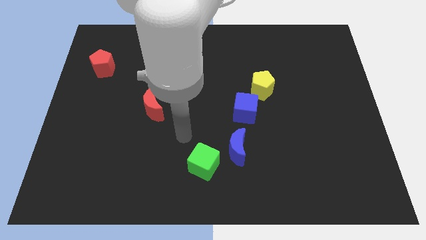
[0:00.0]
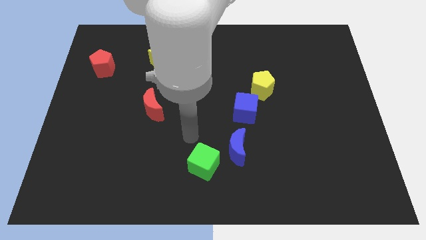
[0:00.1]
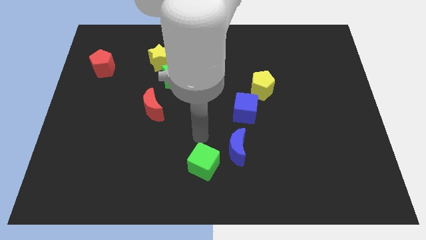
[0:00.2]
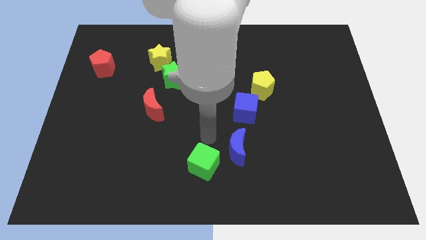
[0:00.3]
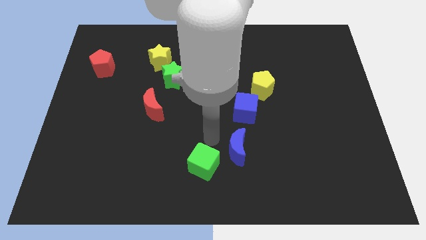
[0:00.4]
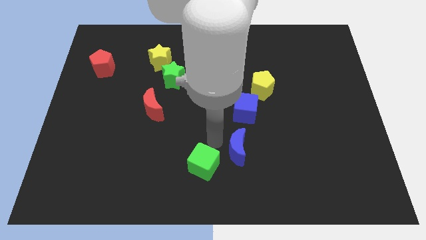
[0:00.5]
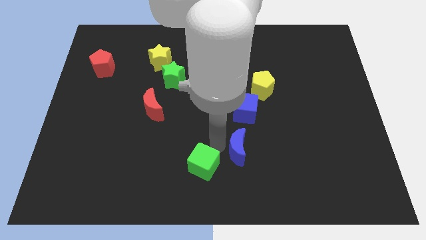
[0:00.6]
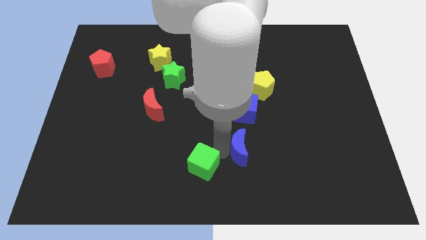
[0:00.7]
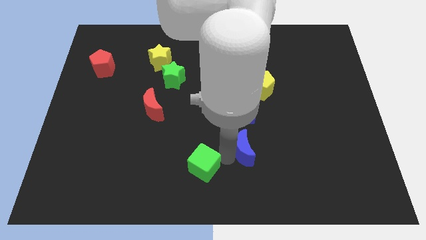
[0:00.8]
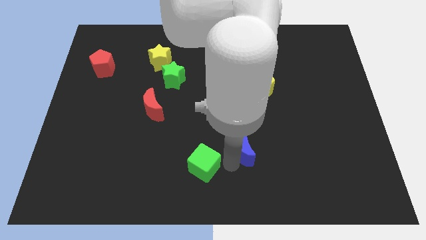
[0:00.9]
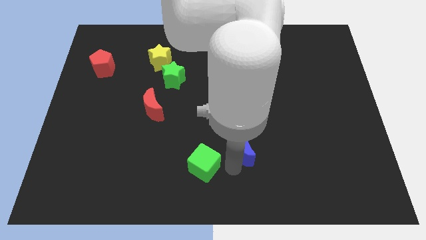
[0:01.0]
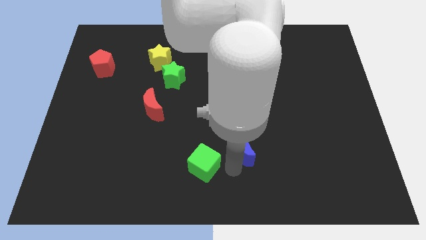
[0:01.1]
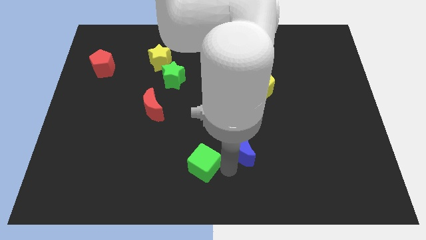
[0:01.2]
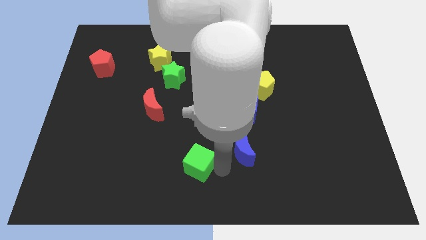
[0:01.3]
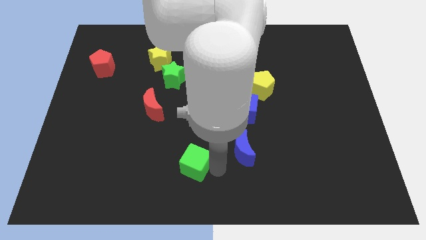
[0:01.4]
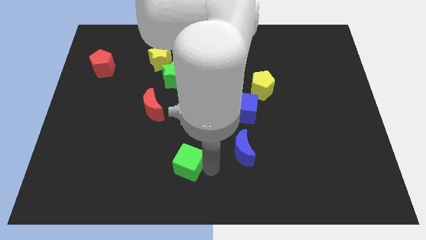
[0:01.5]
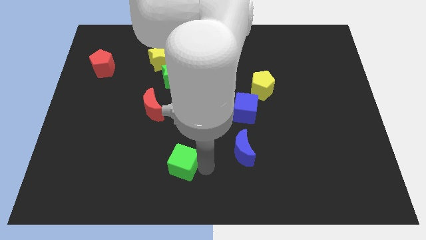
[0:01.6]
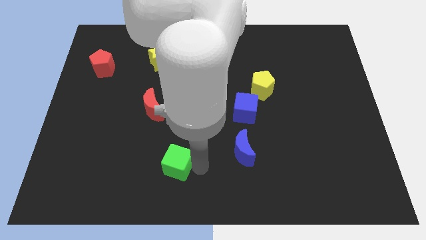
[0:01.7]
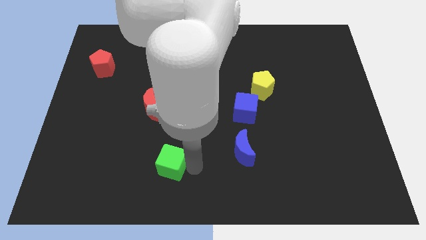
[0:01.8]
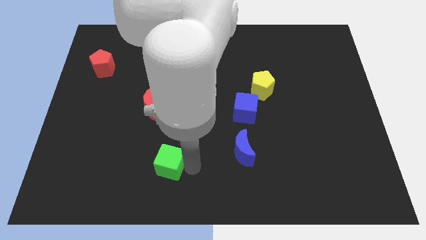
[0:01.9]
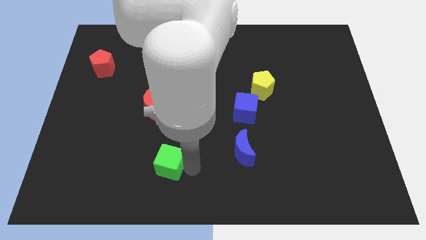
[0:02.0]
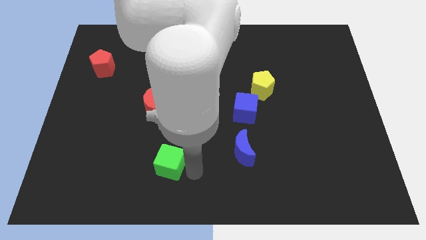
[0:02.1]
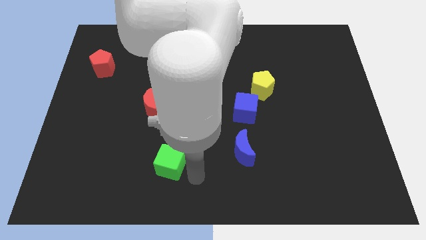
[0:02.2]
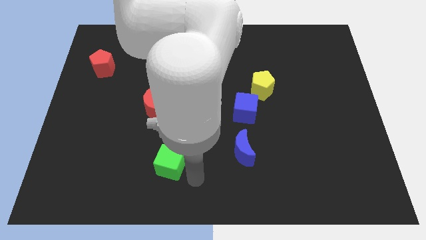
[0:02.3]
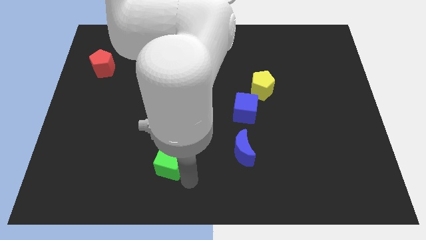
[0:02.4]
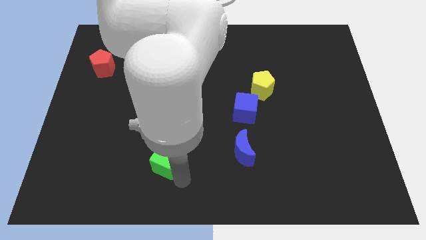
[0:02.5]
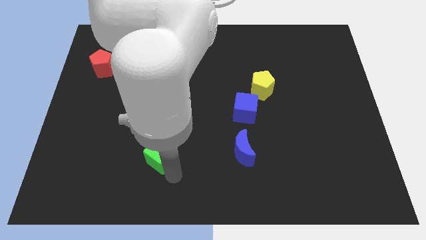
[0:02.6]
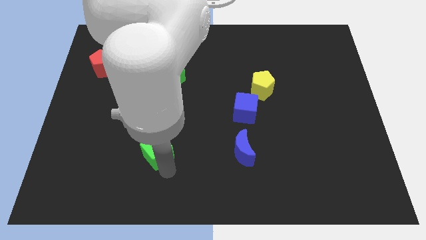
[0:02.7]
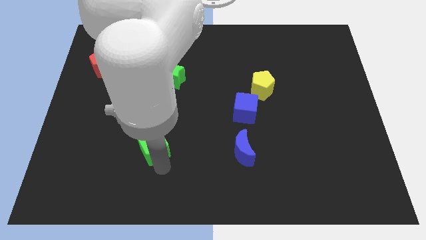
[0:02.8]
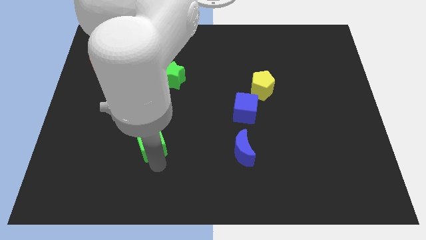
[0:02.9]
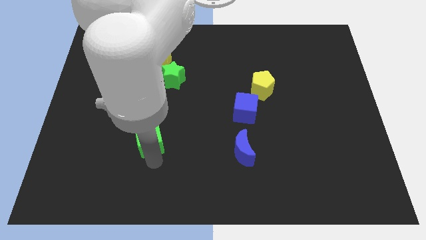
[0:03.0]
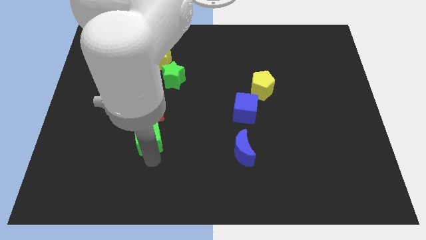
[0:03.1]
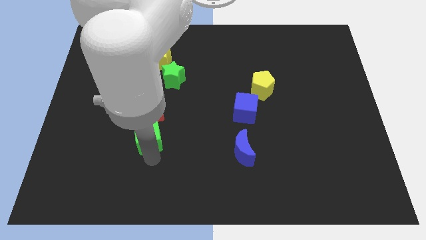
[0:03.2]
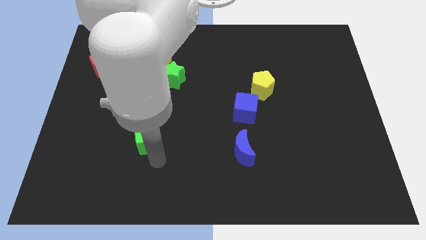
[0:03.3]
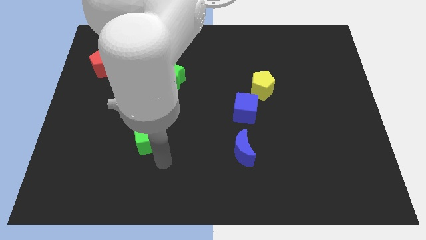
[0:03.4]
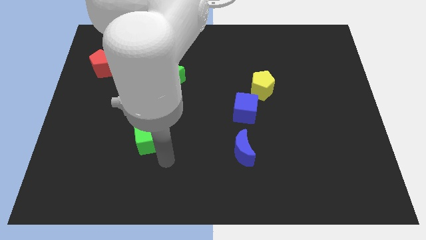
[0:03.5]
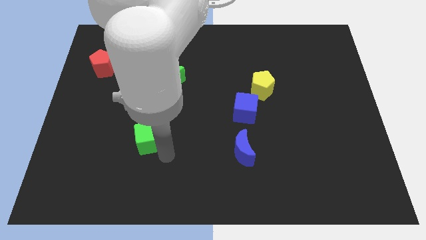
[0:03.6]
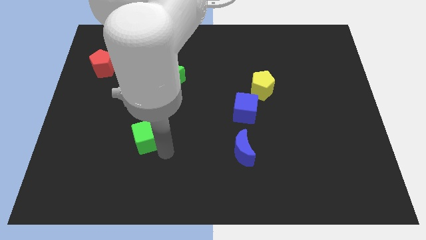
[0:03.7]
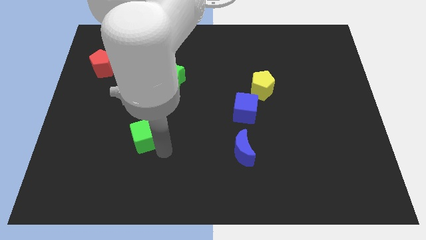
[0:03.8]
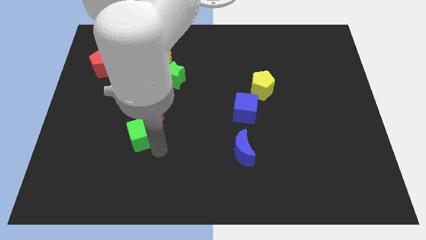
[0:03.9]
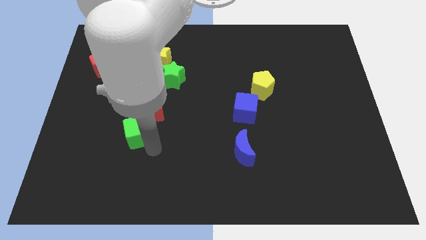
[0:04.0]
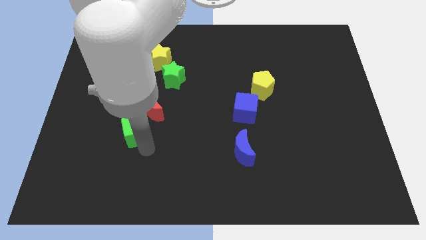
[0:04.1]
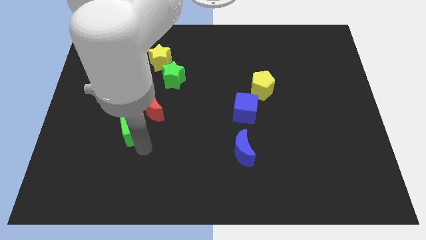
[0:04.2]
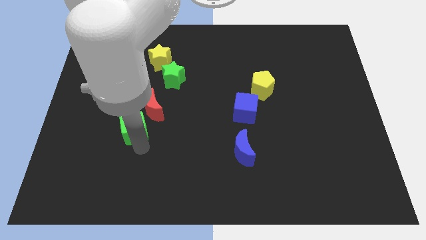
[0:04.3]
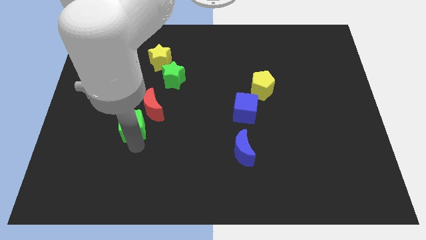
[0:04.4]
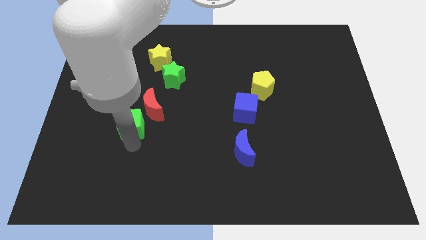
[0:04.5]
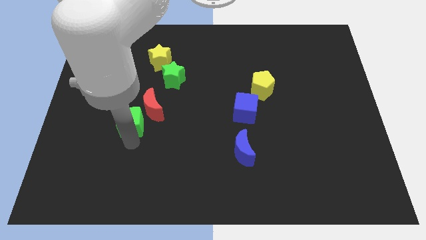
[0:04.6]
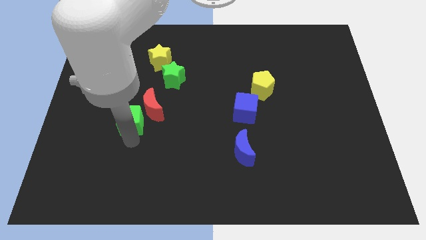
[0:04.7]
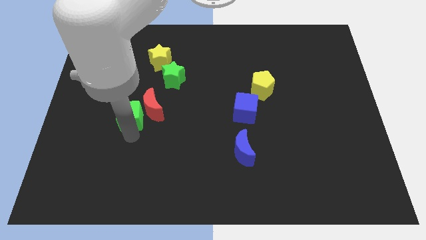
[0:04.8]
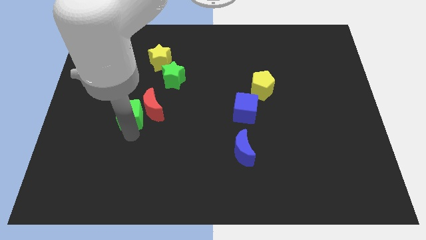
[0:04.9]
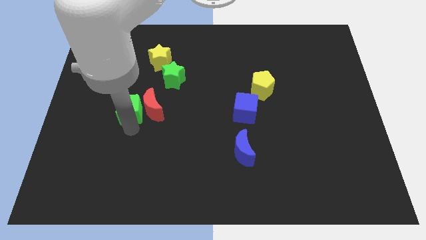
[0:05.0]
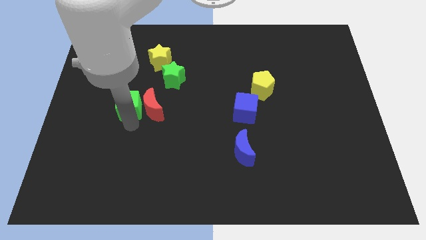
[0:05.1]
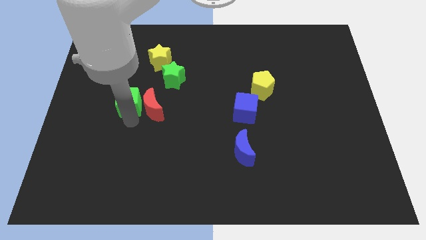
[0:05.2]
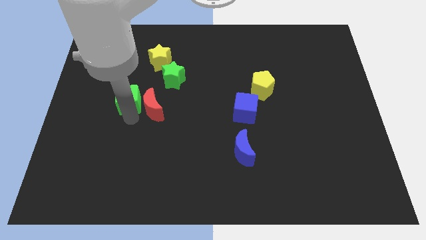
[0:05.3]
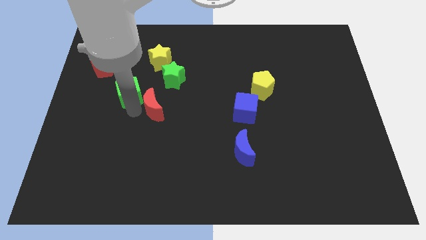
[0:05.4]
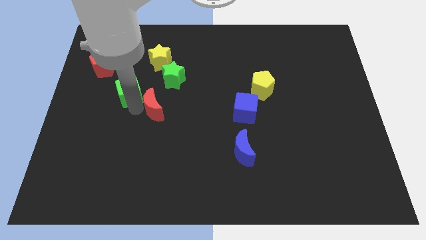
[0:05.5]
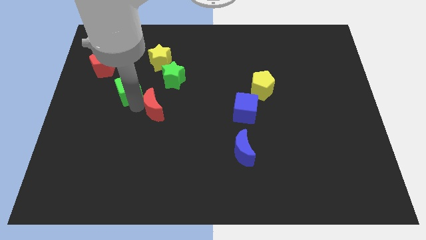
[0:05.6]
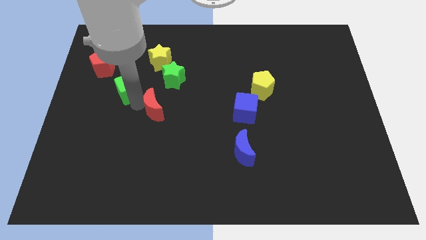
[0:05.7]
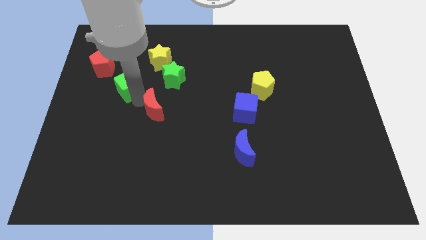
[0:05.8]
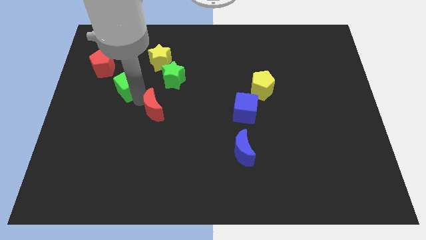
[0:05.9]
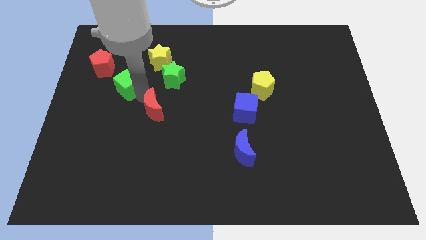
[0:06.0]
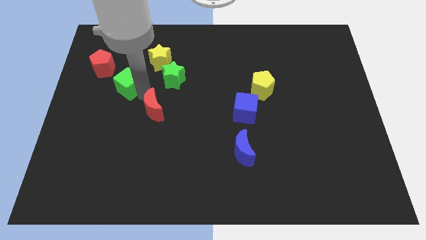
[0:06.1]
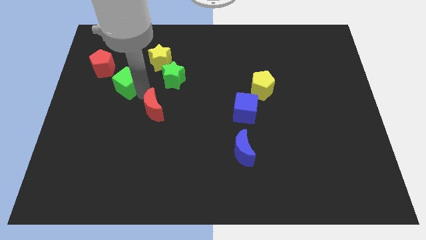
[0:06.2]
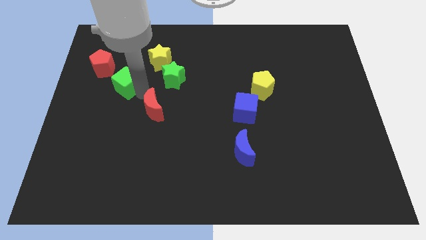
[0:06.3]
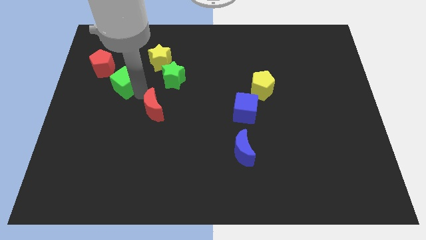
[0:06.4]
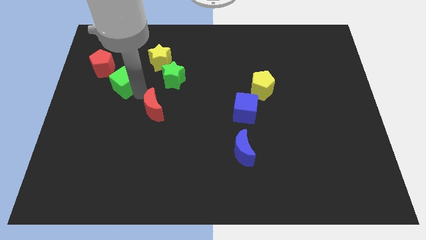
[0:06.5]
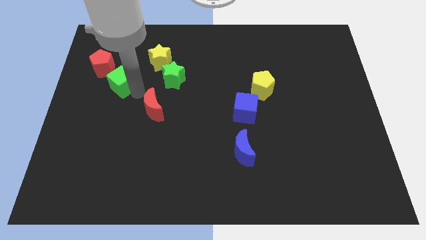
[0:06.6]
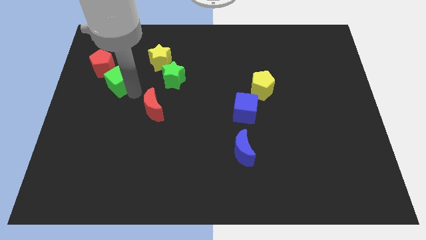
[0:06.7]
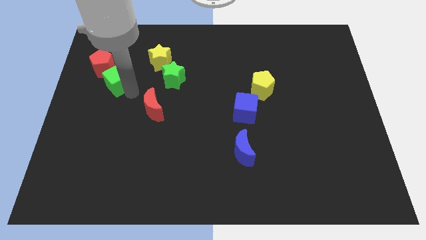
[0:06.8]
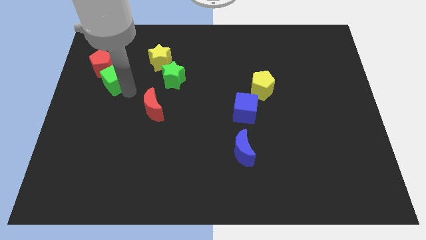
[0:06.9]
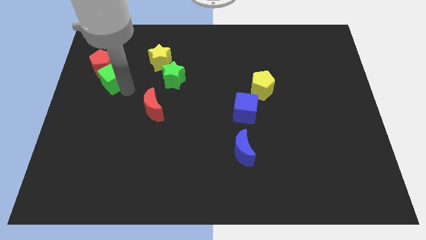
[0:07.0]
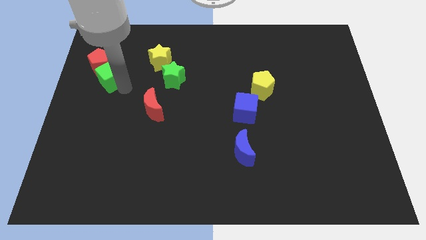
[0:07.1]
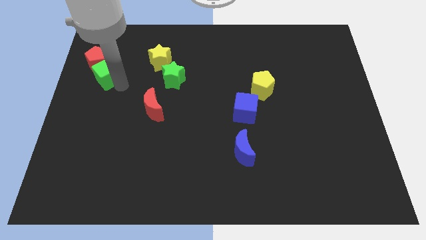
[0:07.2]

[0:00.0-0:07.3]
move the green cube towards the red pentagon

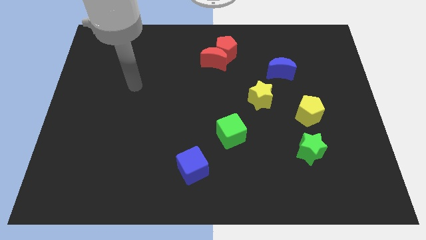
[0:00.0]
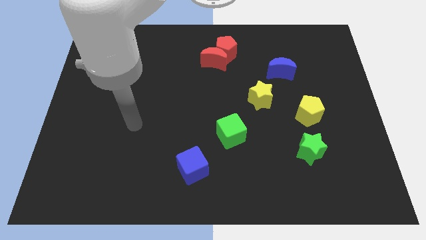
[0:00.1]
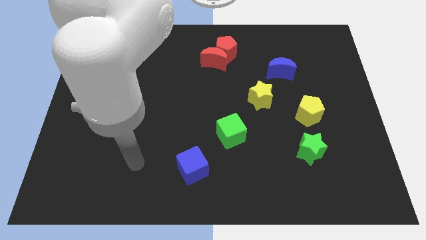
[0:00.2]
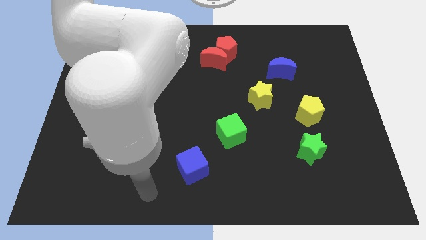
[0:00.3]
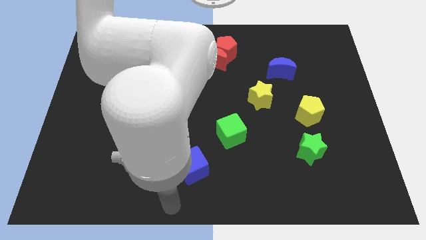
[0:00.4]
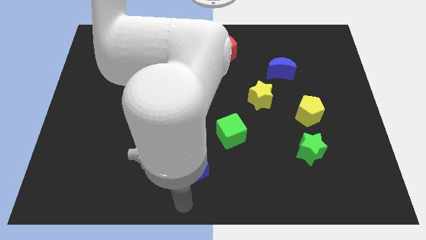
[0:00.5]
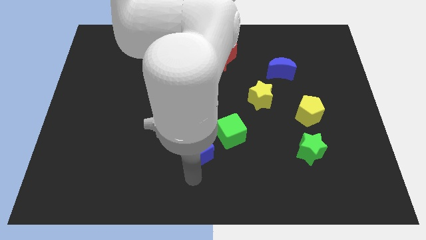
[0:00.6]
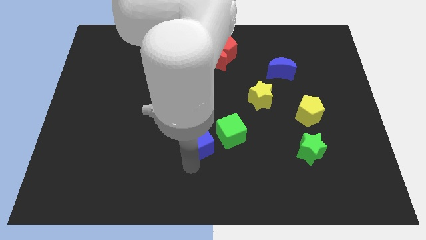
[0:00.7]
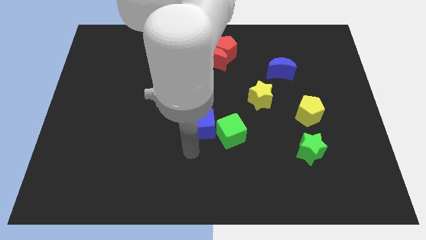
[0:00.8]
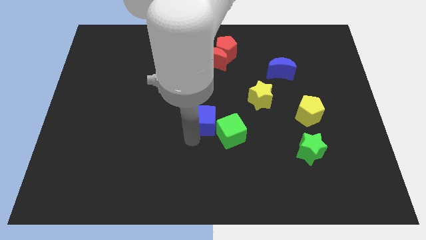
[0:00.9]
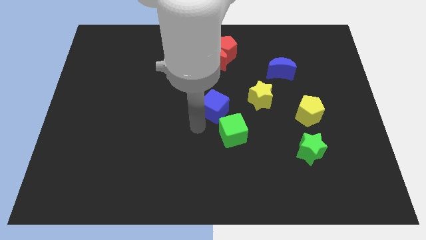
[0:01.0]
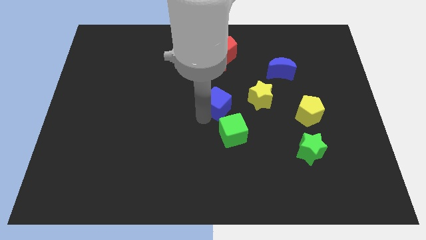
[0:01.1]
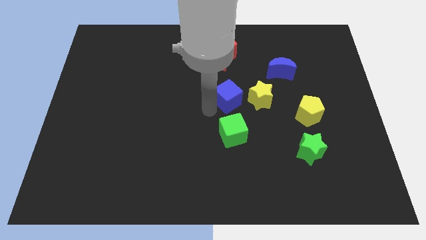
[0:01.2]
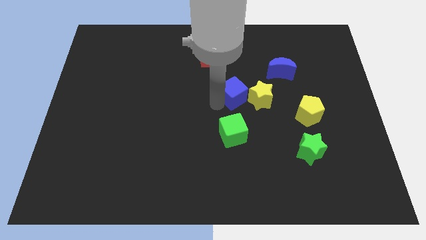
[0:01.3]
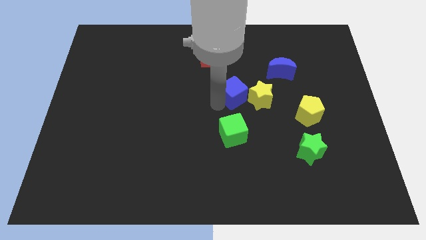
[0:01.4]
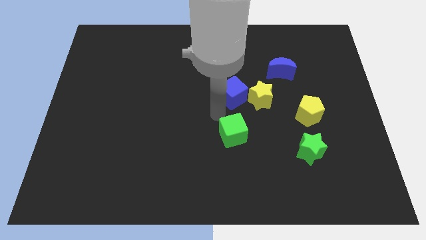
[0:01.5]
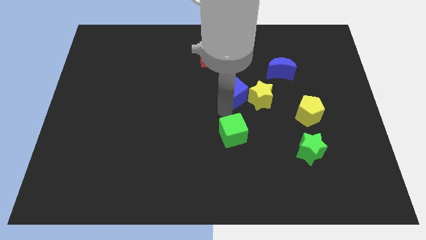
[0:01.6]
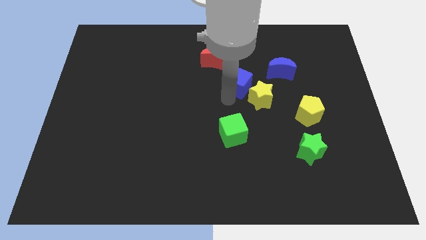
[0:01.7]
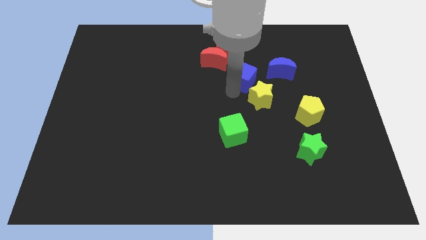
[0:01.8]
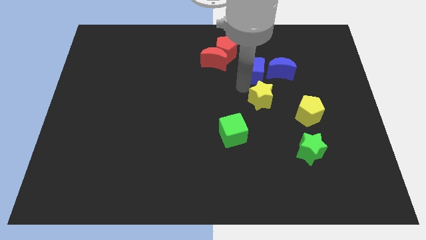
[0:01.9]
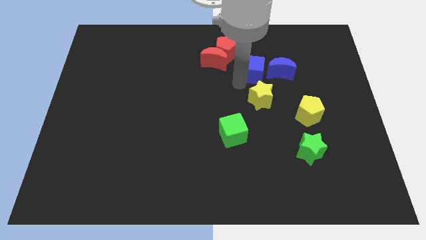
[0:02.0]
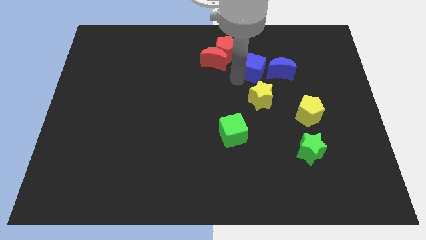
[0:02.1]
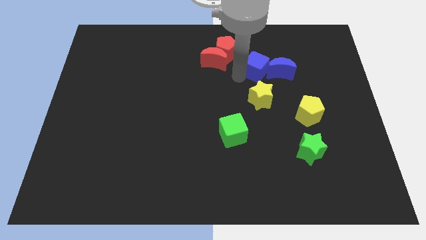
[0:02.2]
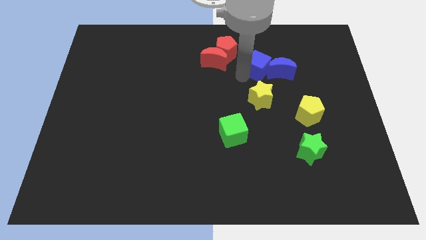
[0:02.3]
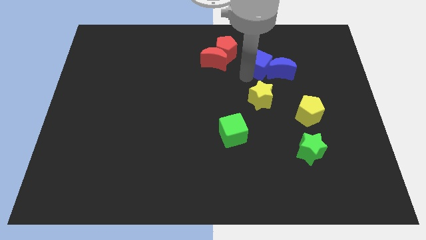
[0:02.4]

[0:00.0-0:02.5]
slide the blue cube close to the blue moon
